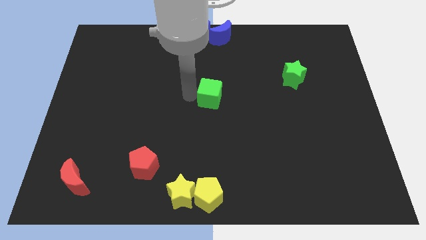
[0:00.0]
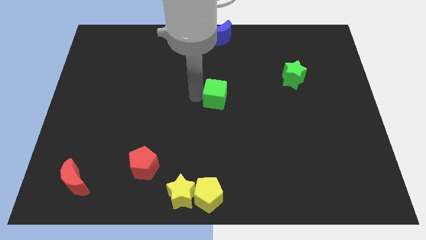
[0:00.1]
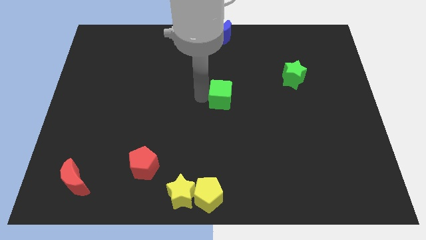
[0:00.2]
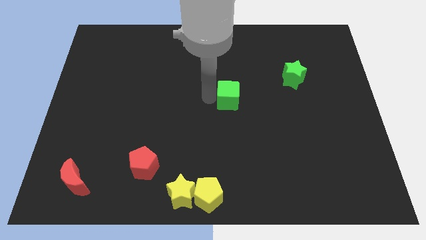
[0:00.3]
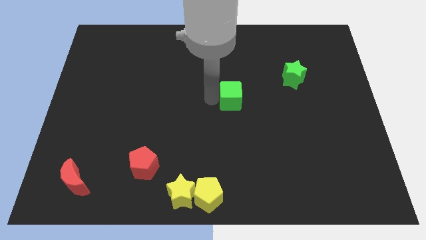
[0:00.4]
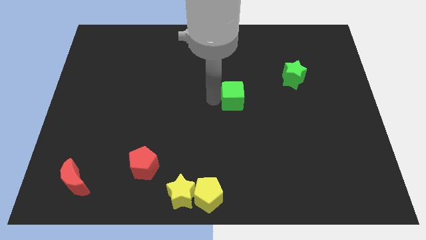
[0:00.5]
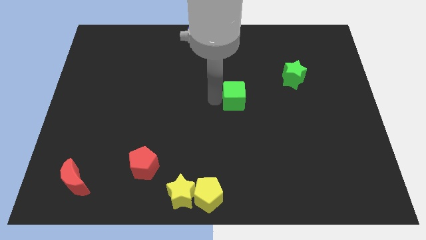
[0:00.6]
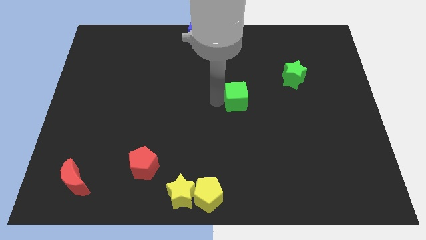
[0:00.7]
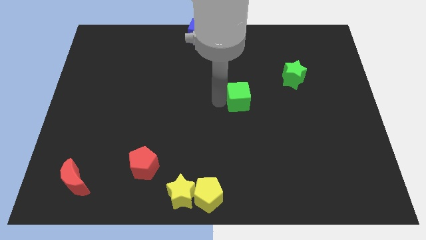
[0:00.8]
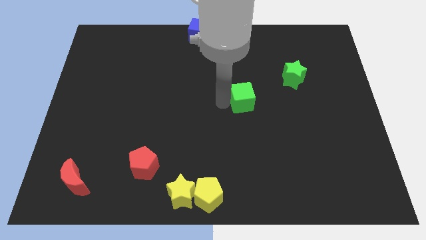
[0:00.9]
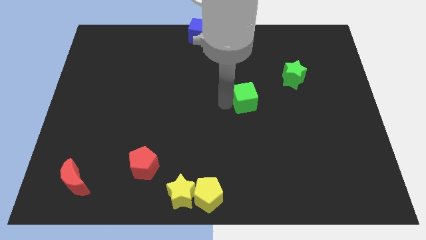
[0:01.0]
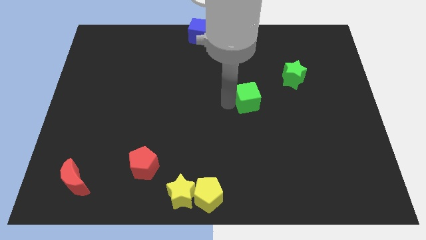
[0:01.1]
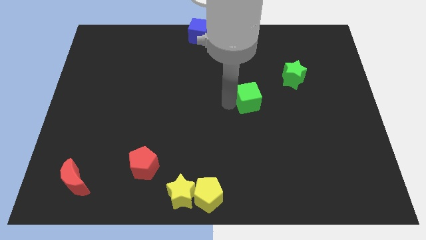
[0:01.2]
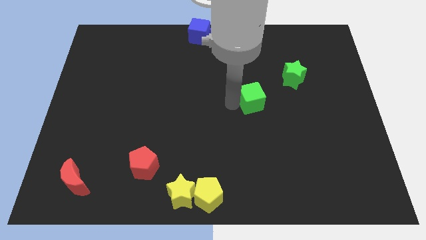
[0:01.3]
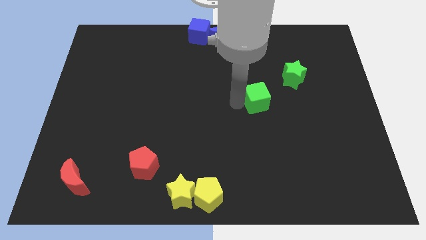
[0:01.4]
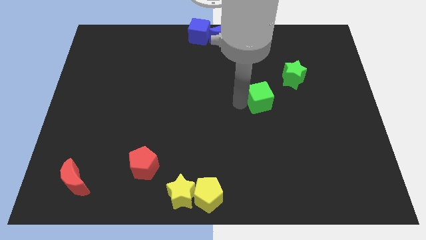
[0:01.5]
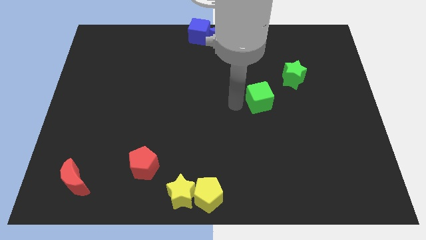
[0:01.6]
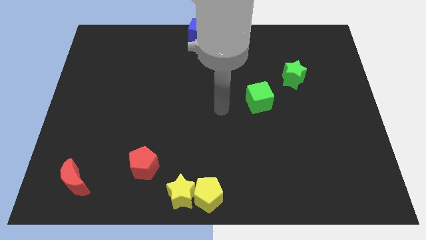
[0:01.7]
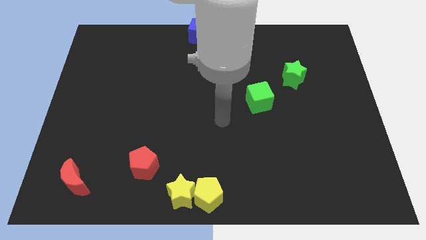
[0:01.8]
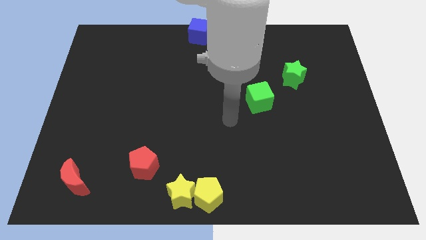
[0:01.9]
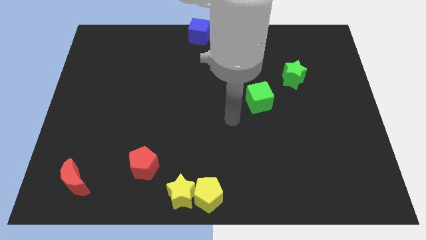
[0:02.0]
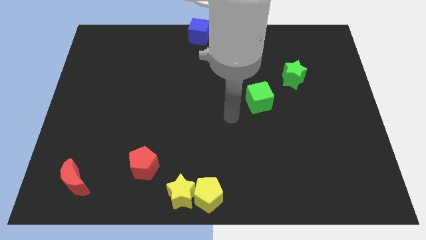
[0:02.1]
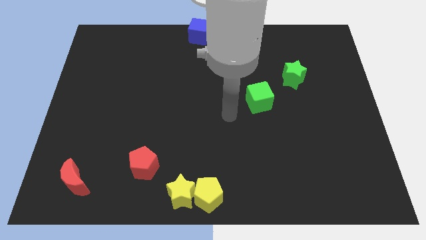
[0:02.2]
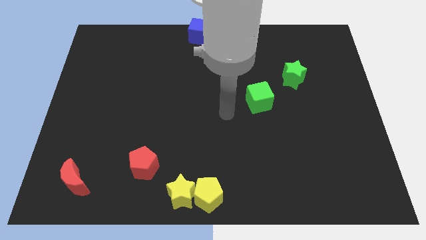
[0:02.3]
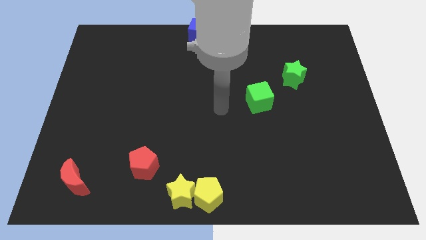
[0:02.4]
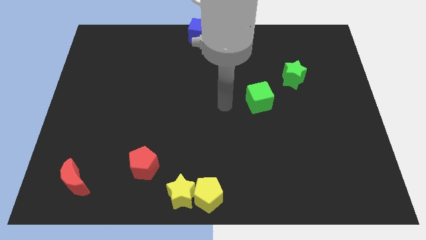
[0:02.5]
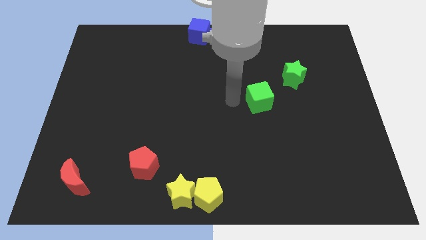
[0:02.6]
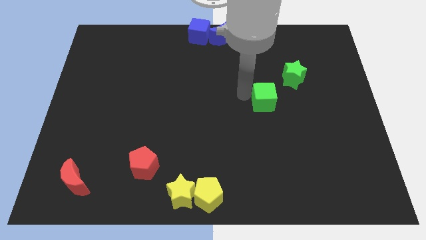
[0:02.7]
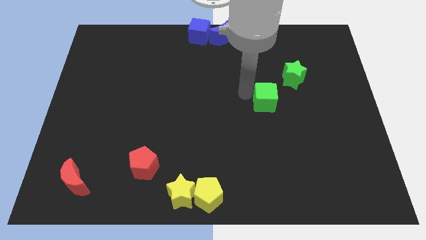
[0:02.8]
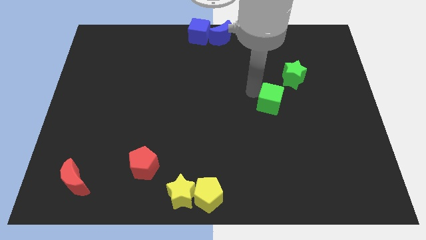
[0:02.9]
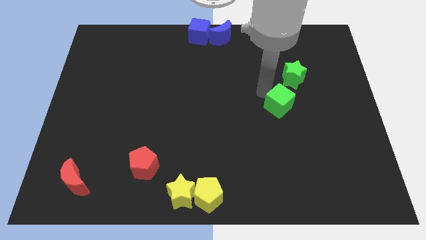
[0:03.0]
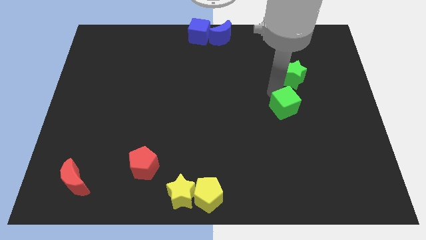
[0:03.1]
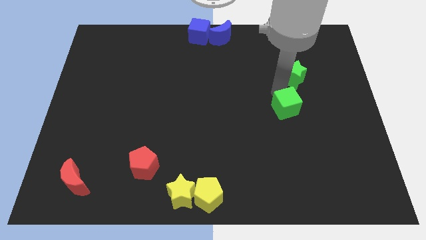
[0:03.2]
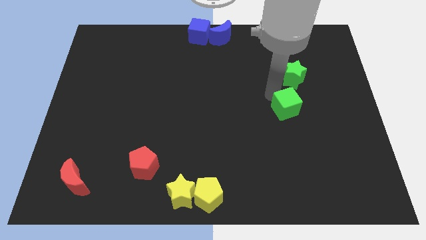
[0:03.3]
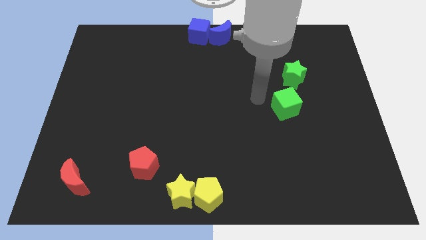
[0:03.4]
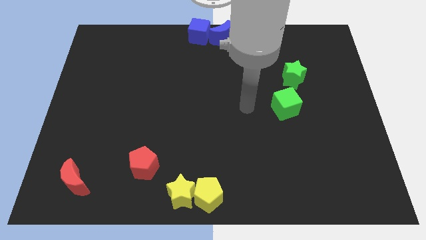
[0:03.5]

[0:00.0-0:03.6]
place the green cube down to the green star

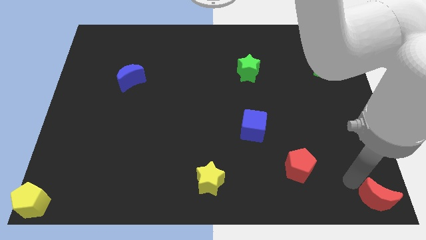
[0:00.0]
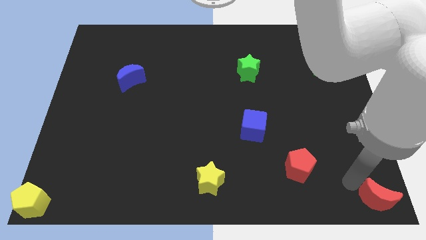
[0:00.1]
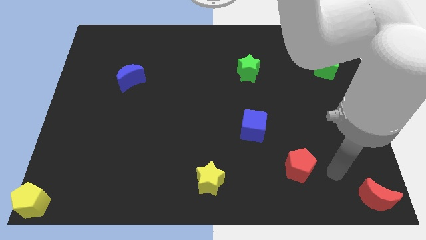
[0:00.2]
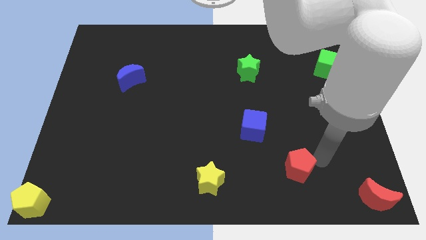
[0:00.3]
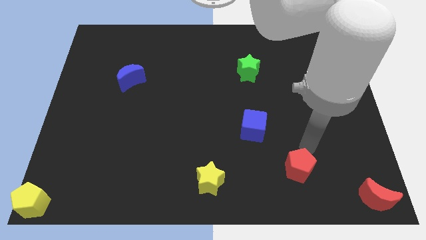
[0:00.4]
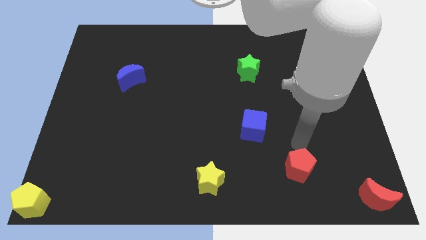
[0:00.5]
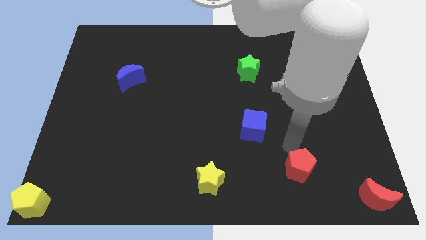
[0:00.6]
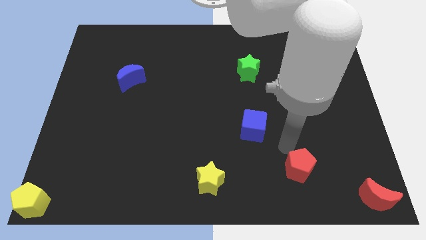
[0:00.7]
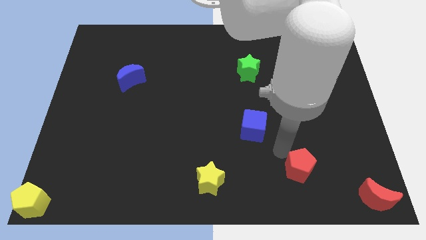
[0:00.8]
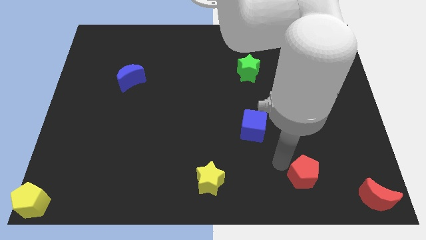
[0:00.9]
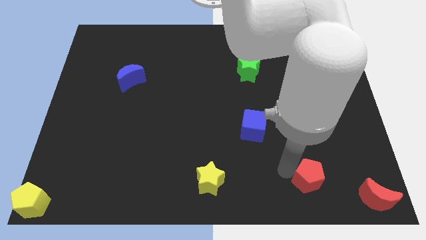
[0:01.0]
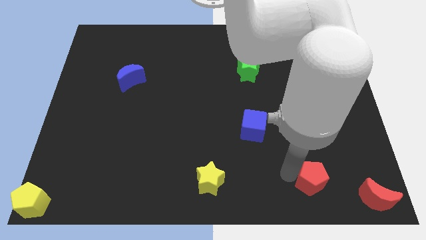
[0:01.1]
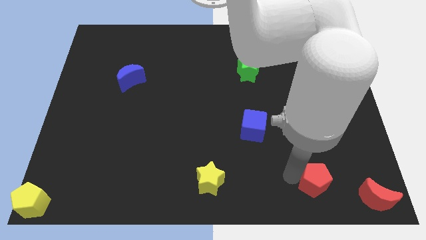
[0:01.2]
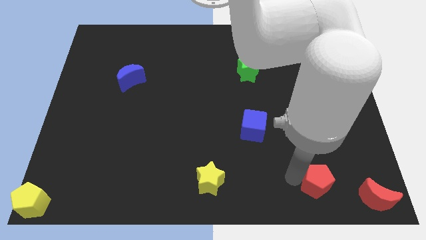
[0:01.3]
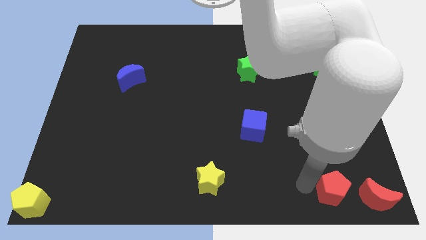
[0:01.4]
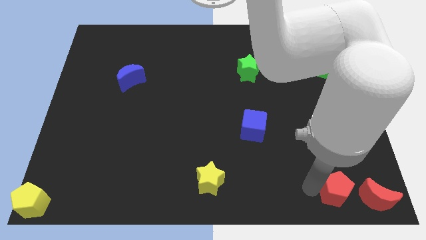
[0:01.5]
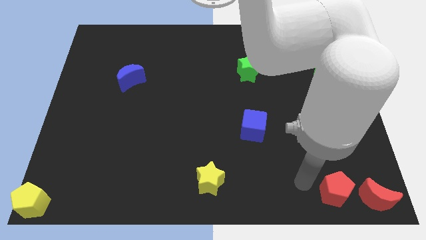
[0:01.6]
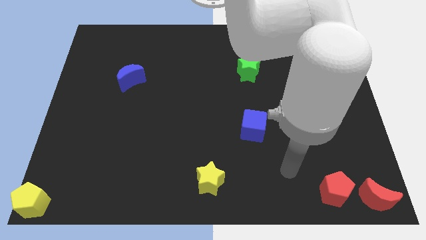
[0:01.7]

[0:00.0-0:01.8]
push the red pentagon left to the red crescent

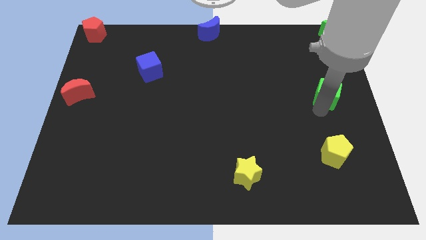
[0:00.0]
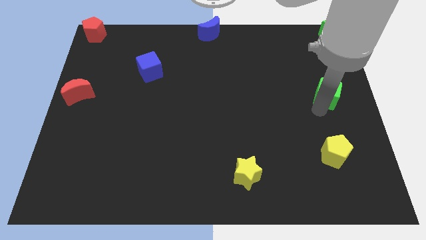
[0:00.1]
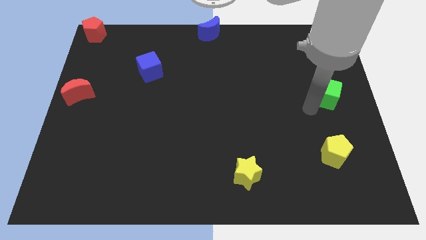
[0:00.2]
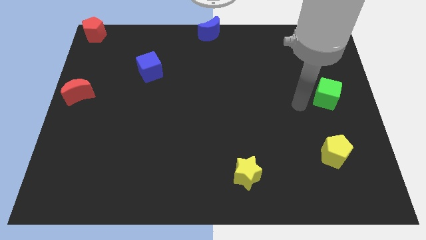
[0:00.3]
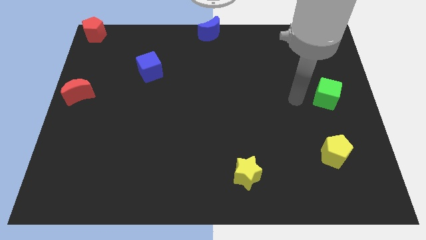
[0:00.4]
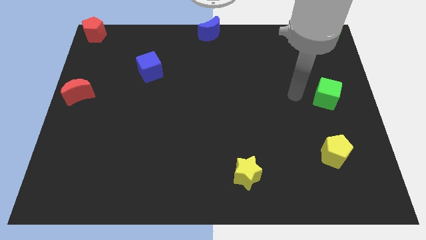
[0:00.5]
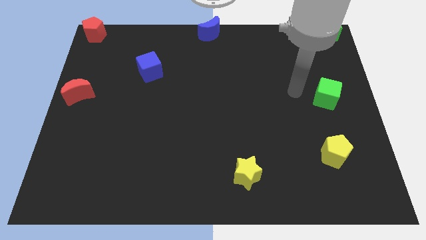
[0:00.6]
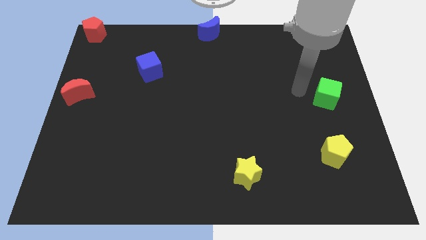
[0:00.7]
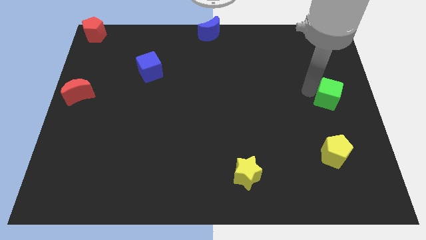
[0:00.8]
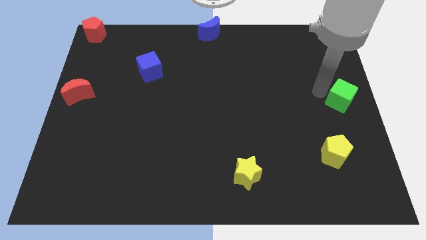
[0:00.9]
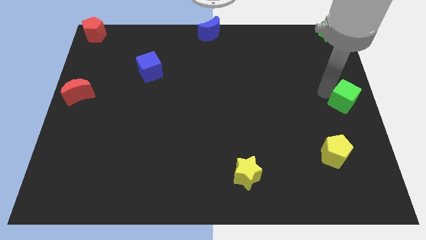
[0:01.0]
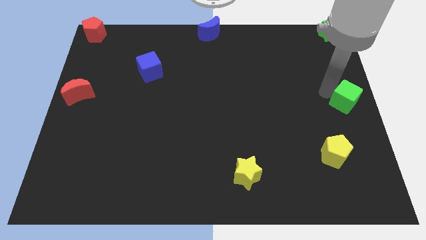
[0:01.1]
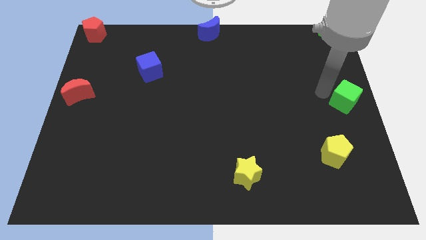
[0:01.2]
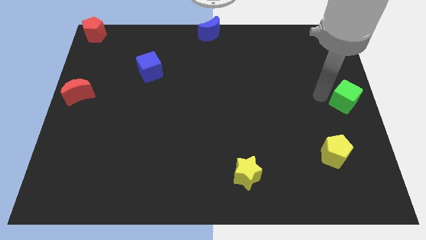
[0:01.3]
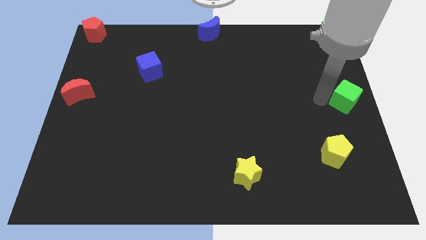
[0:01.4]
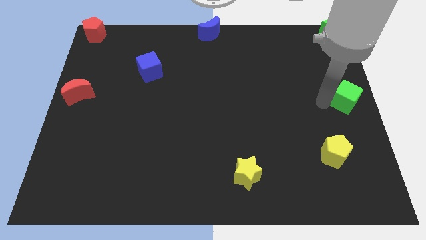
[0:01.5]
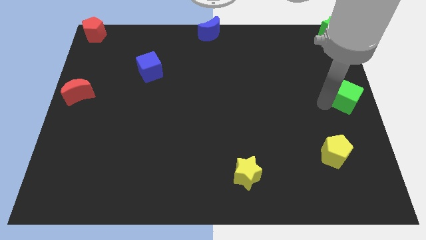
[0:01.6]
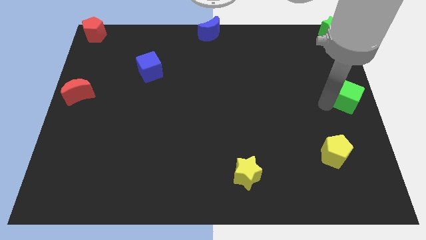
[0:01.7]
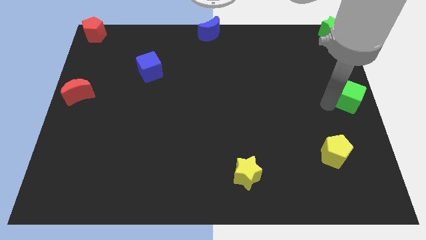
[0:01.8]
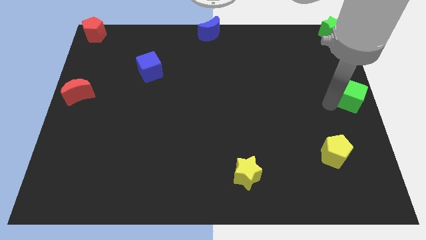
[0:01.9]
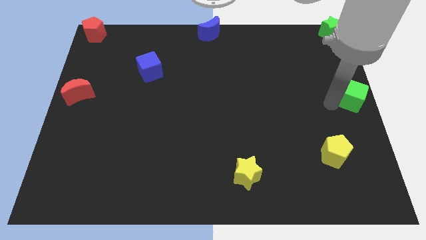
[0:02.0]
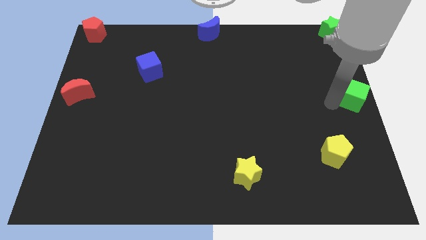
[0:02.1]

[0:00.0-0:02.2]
push the green star to the right center of the board

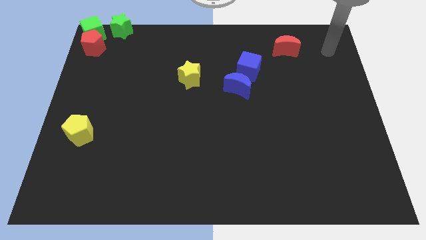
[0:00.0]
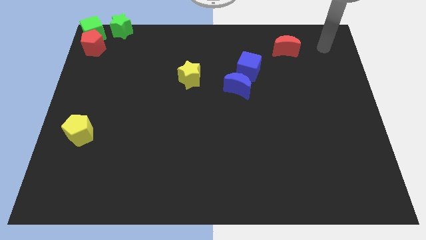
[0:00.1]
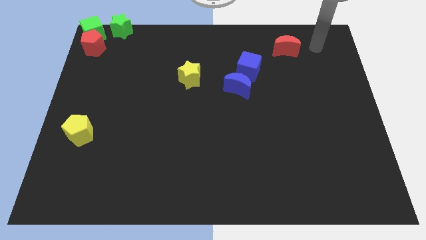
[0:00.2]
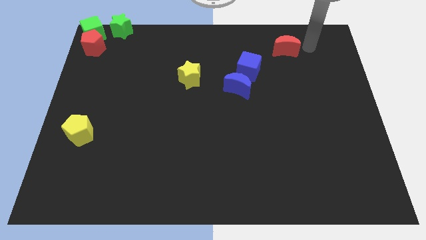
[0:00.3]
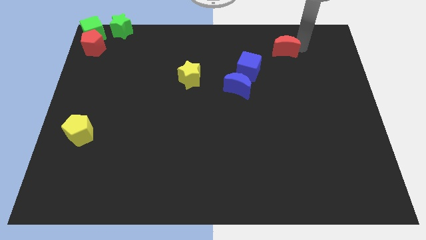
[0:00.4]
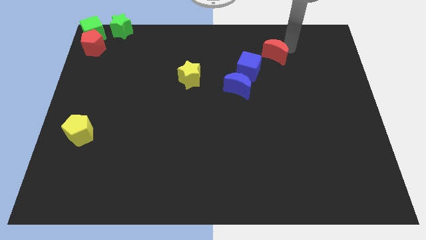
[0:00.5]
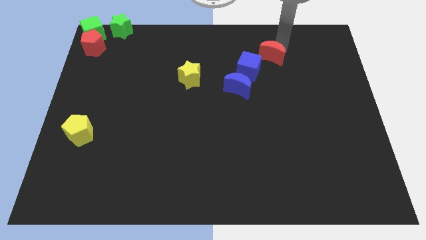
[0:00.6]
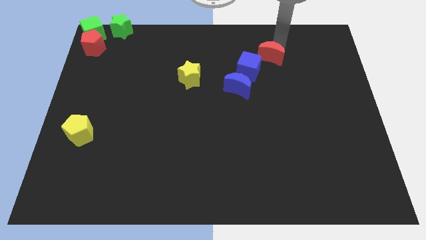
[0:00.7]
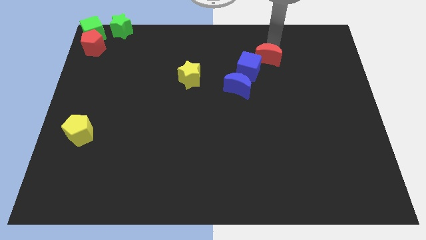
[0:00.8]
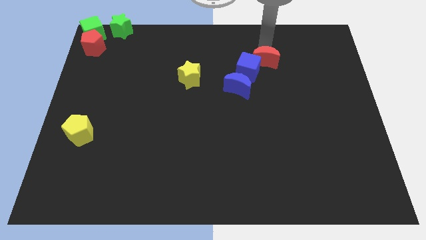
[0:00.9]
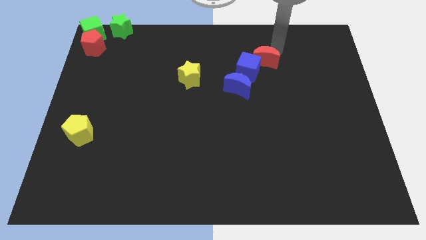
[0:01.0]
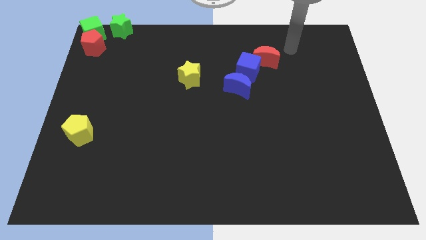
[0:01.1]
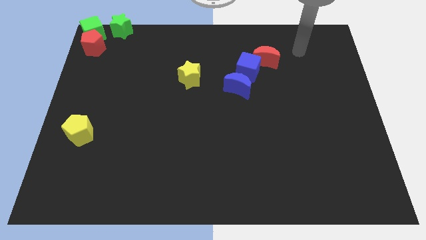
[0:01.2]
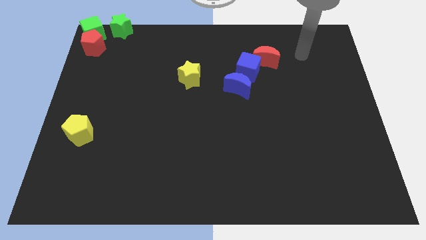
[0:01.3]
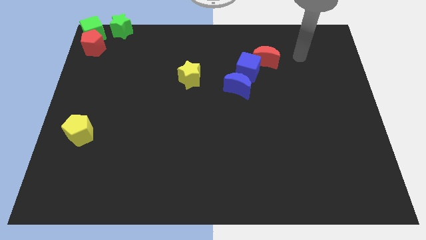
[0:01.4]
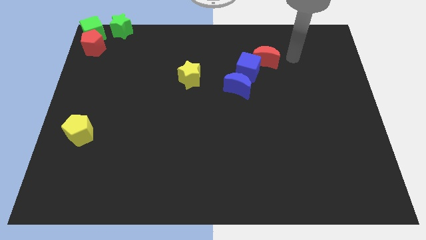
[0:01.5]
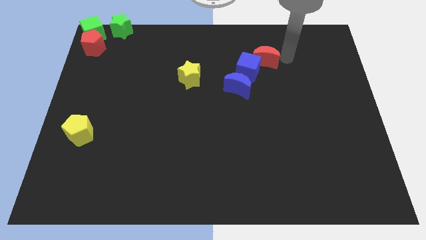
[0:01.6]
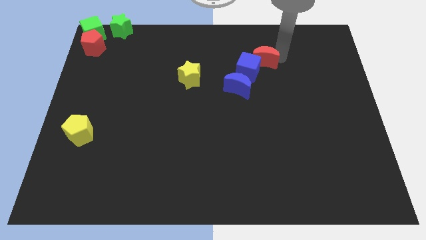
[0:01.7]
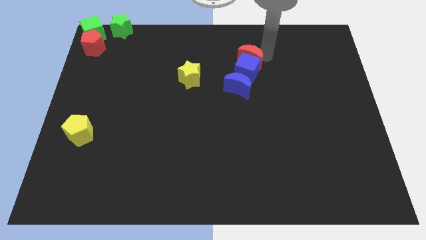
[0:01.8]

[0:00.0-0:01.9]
push the red moon above into the blue cube
